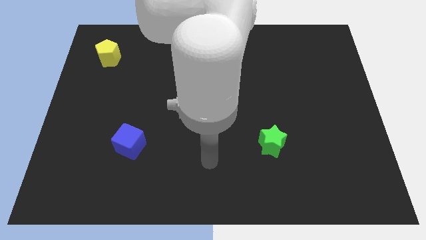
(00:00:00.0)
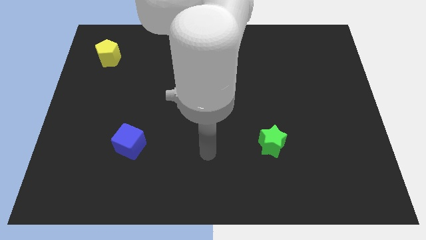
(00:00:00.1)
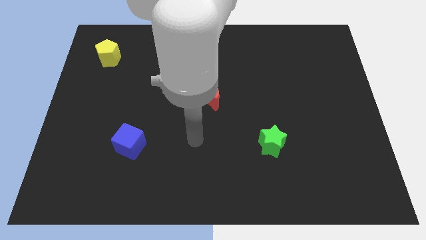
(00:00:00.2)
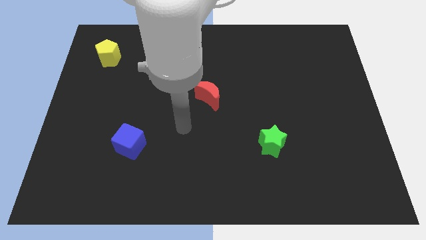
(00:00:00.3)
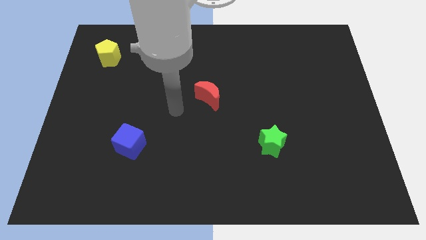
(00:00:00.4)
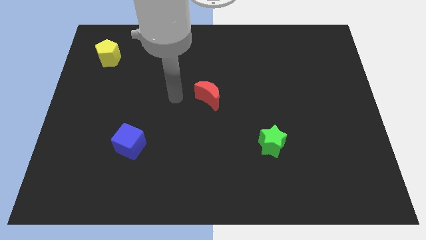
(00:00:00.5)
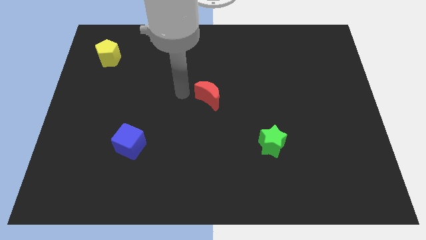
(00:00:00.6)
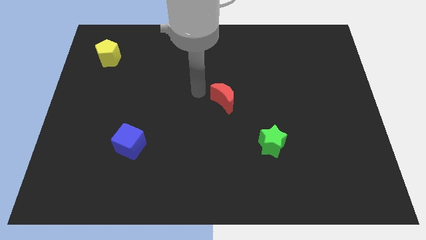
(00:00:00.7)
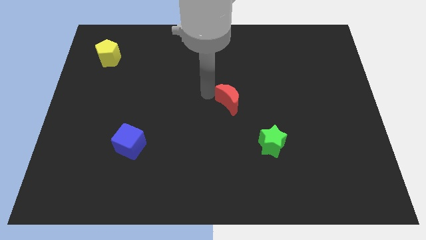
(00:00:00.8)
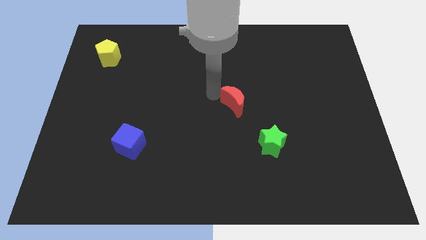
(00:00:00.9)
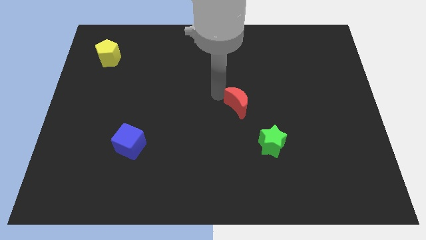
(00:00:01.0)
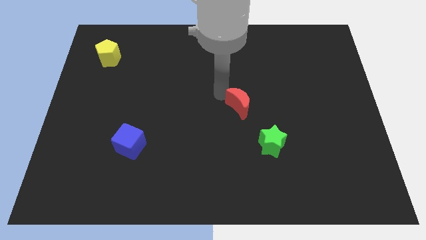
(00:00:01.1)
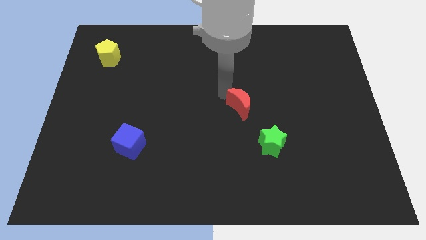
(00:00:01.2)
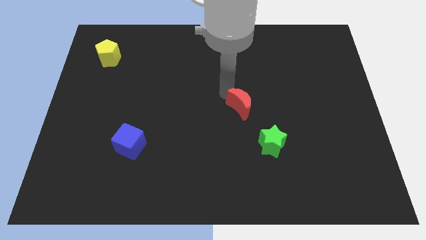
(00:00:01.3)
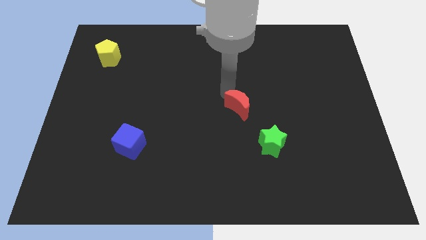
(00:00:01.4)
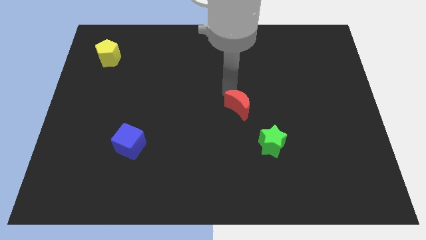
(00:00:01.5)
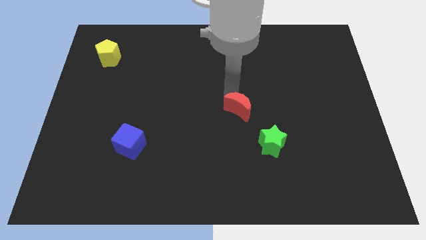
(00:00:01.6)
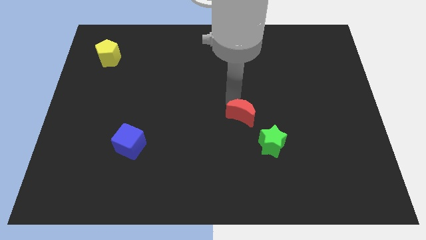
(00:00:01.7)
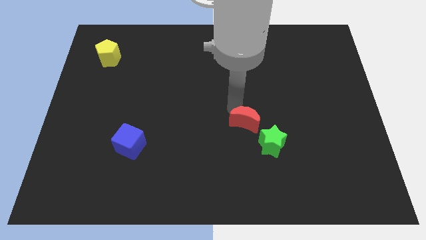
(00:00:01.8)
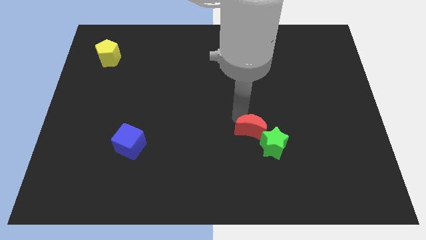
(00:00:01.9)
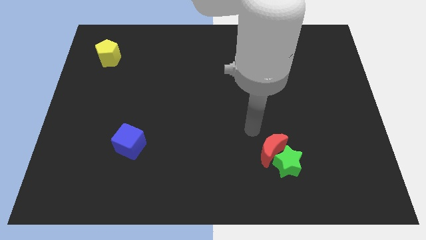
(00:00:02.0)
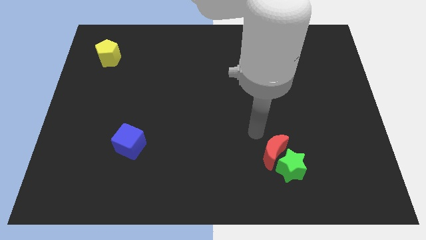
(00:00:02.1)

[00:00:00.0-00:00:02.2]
push the moon to the star

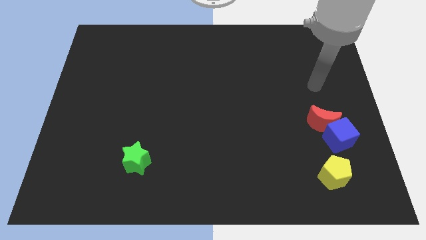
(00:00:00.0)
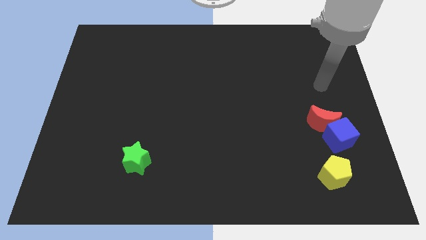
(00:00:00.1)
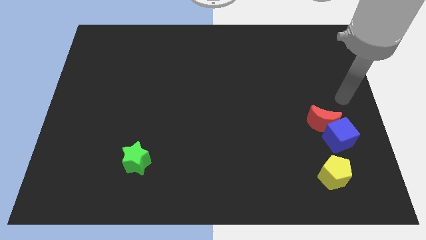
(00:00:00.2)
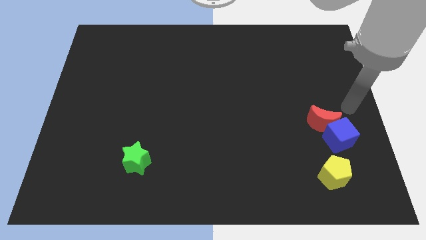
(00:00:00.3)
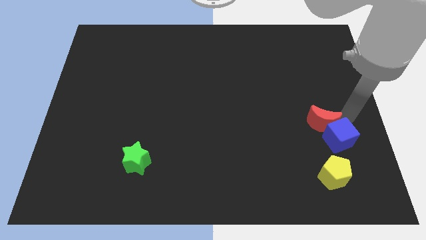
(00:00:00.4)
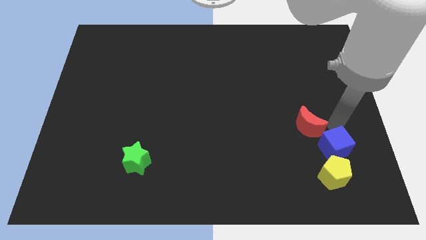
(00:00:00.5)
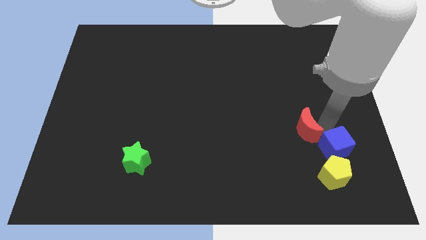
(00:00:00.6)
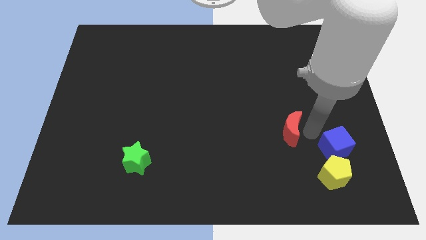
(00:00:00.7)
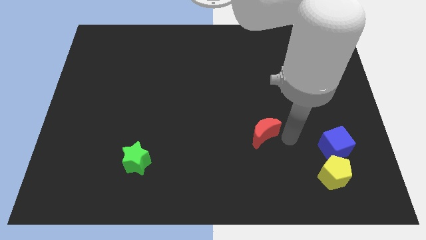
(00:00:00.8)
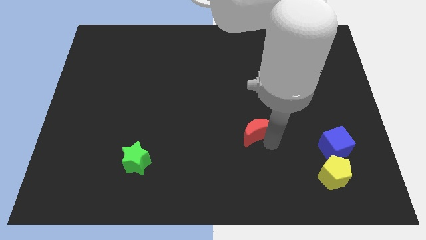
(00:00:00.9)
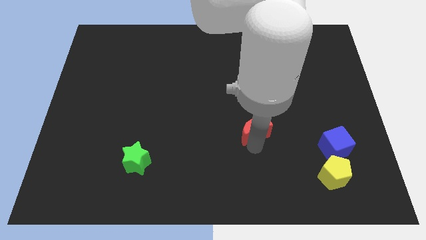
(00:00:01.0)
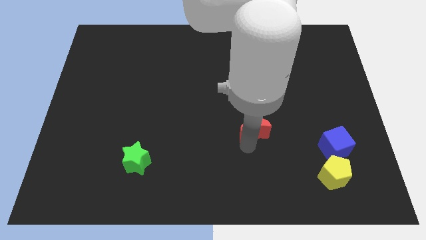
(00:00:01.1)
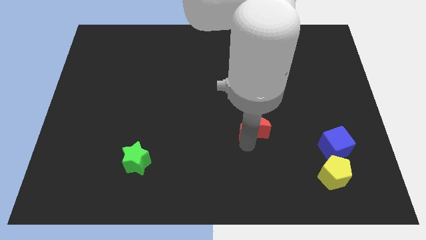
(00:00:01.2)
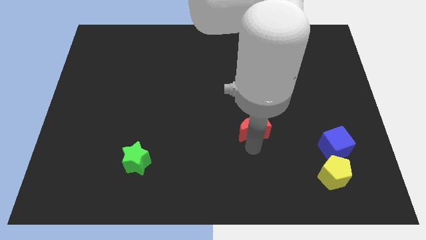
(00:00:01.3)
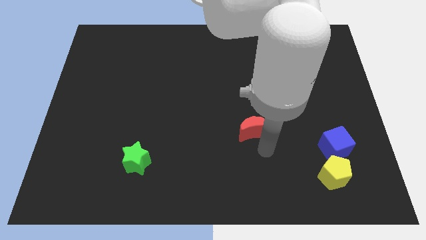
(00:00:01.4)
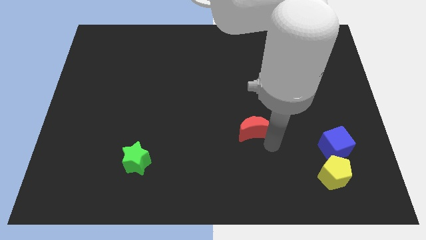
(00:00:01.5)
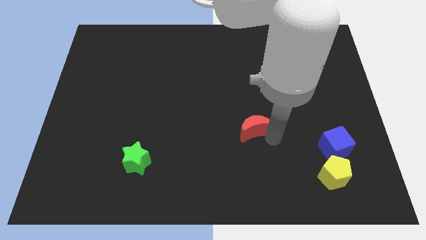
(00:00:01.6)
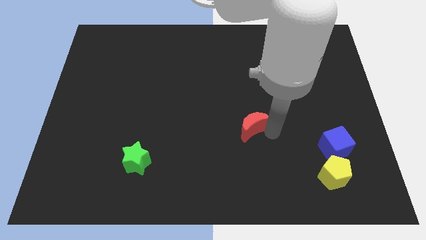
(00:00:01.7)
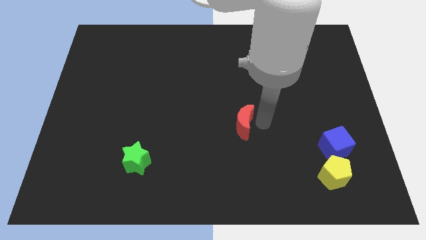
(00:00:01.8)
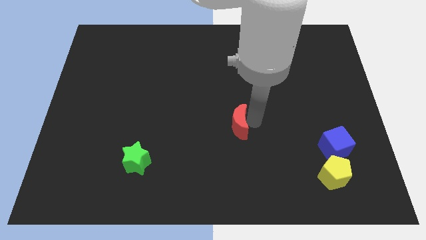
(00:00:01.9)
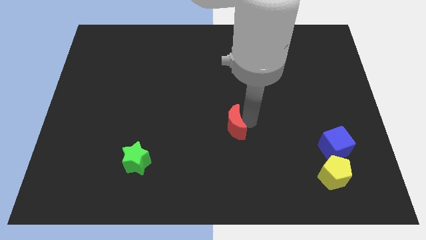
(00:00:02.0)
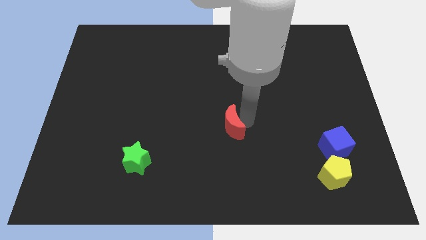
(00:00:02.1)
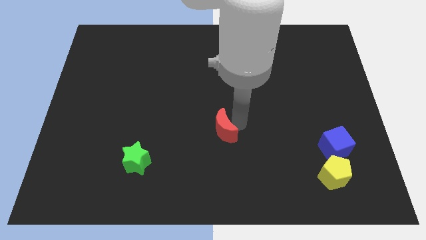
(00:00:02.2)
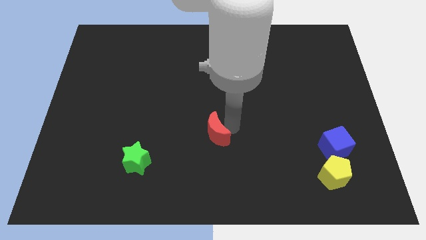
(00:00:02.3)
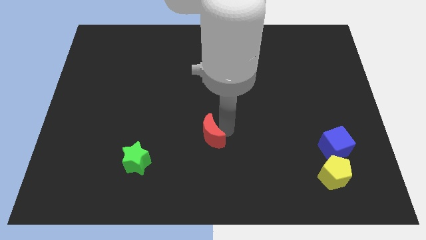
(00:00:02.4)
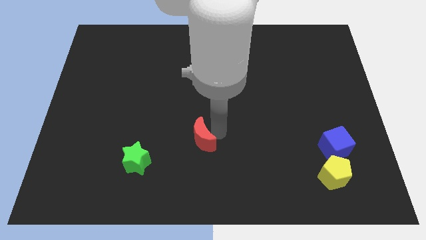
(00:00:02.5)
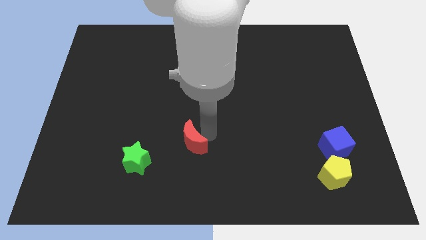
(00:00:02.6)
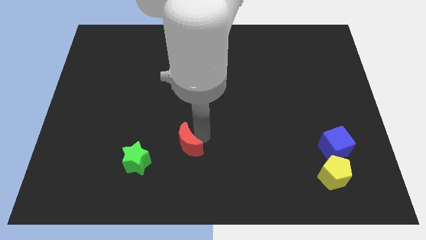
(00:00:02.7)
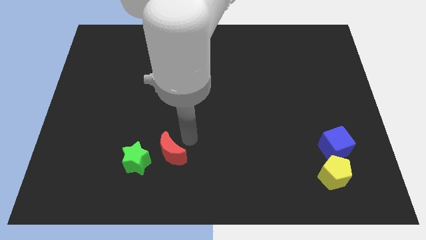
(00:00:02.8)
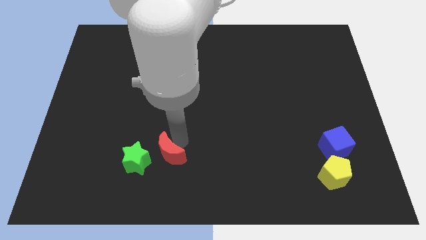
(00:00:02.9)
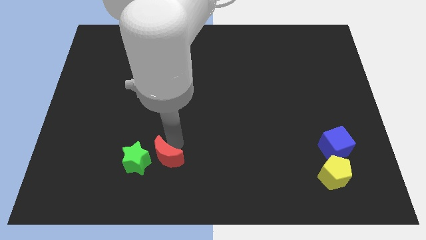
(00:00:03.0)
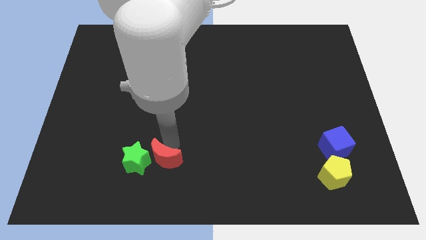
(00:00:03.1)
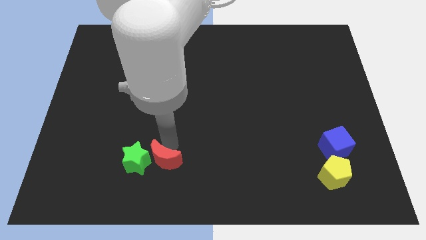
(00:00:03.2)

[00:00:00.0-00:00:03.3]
slide the red moon to the star

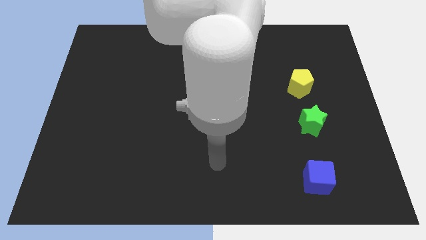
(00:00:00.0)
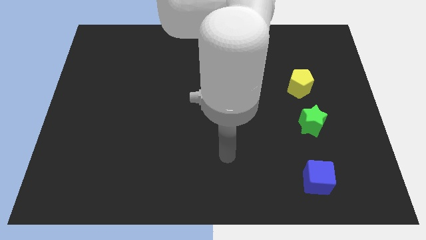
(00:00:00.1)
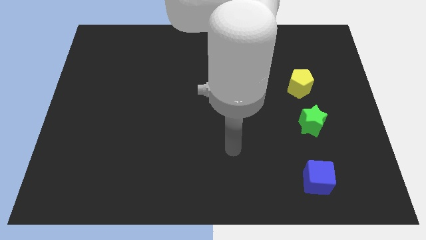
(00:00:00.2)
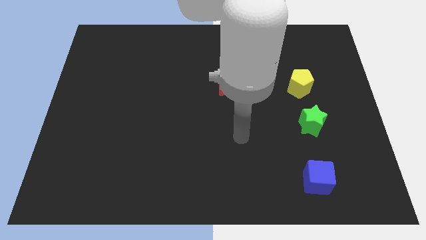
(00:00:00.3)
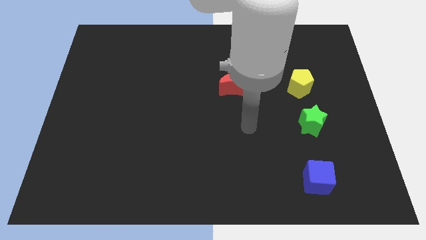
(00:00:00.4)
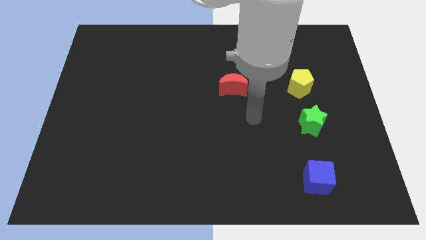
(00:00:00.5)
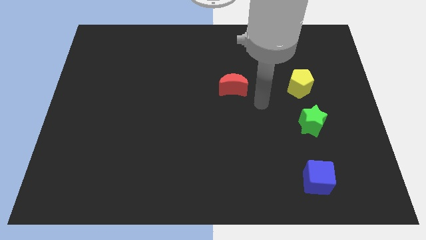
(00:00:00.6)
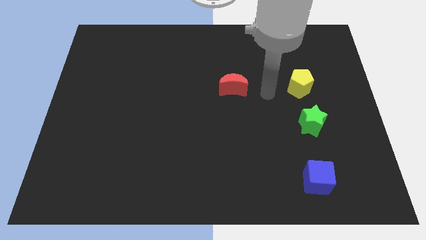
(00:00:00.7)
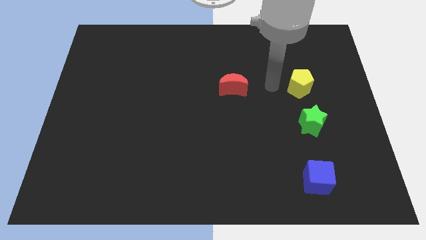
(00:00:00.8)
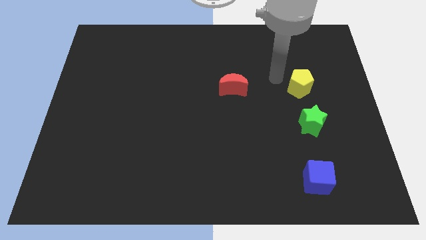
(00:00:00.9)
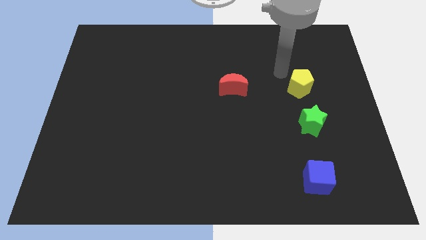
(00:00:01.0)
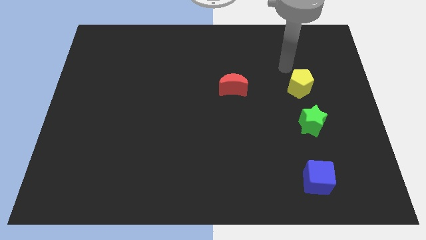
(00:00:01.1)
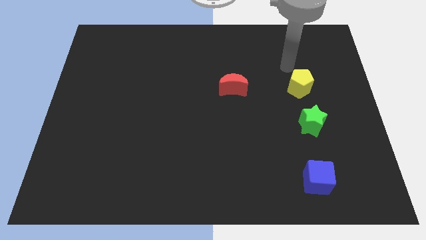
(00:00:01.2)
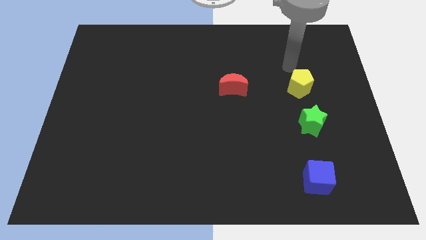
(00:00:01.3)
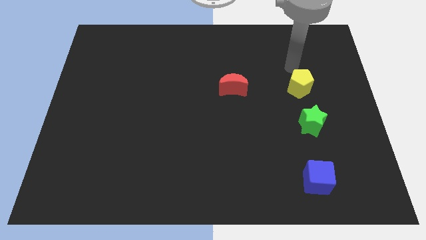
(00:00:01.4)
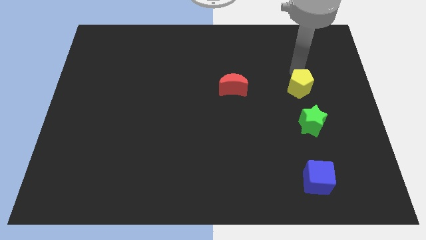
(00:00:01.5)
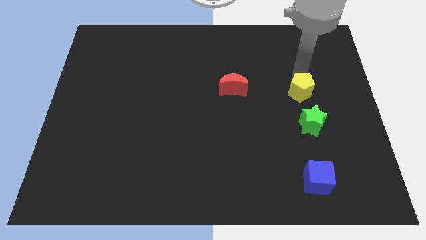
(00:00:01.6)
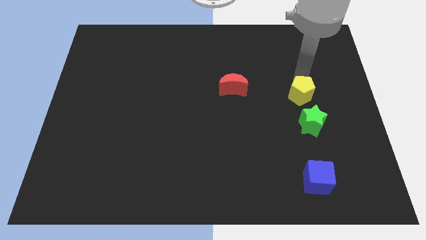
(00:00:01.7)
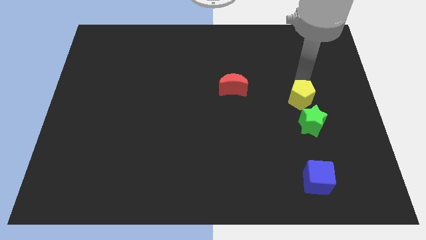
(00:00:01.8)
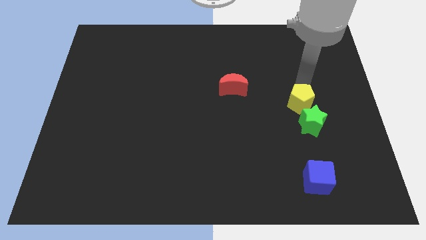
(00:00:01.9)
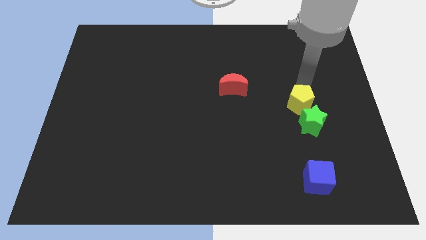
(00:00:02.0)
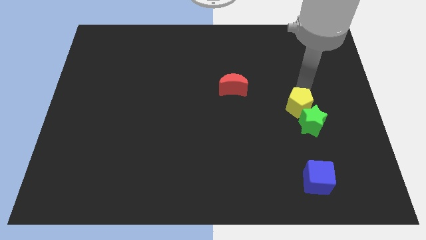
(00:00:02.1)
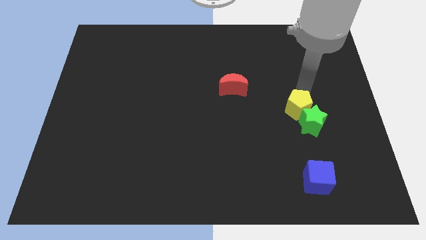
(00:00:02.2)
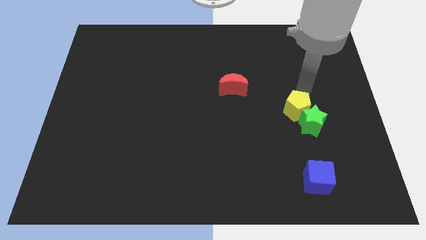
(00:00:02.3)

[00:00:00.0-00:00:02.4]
push the pentagon towards the green star

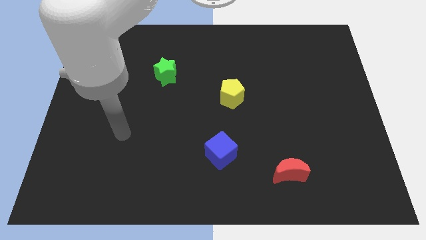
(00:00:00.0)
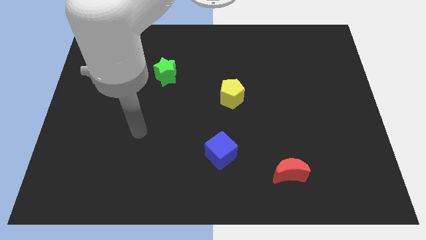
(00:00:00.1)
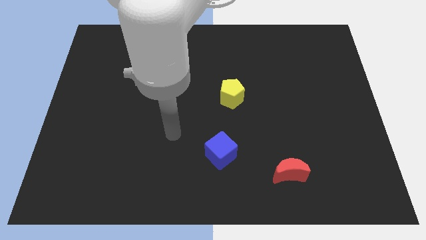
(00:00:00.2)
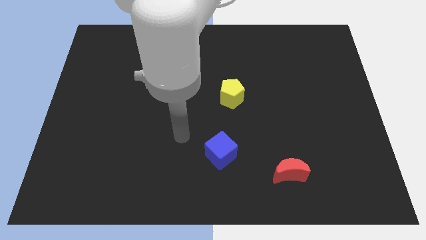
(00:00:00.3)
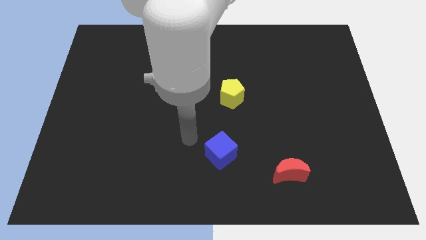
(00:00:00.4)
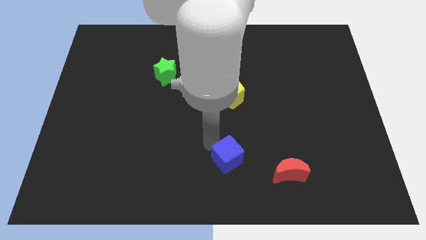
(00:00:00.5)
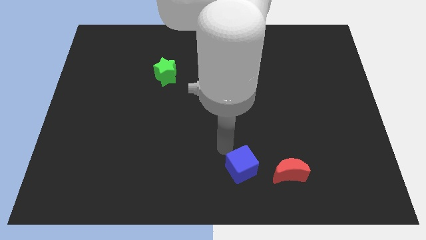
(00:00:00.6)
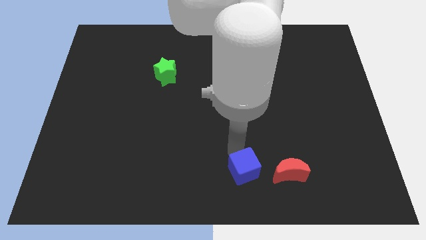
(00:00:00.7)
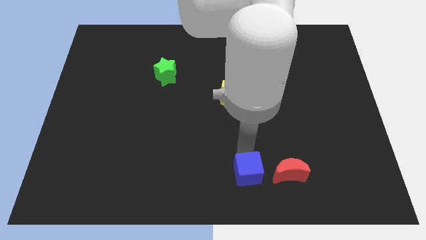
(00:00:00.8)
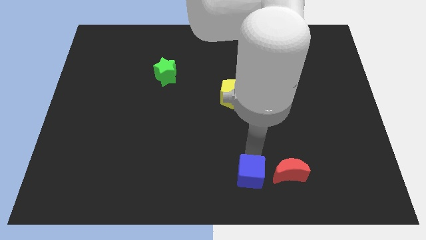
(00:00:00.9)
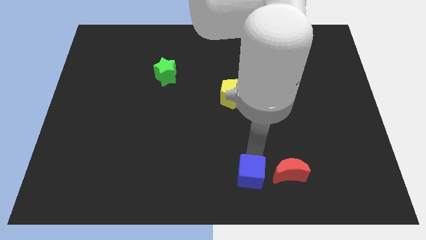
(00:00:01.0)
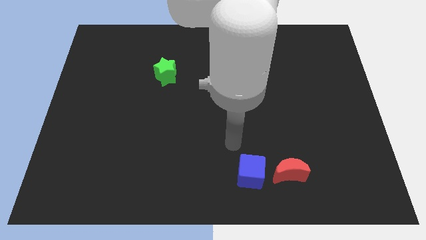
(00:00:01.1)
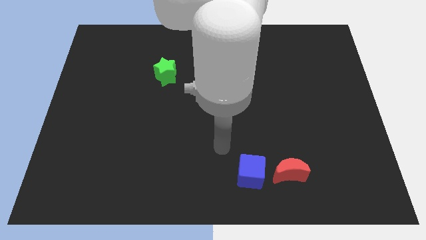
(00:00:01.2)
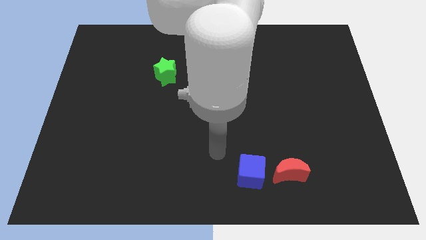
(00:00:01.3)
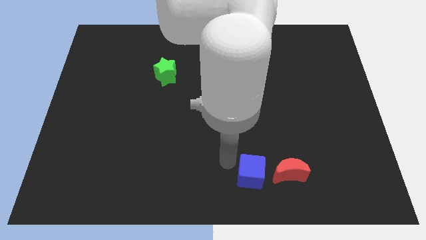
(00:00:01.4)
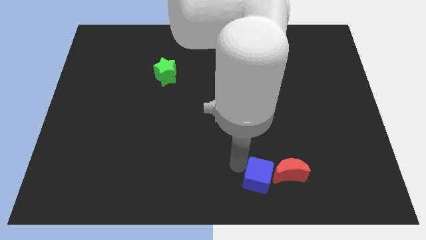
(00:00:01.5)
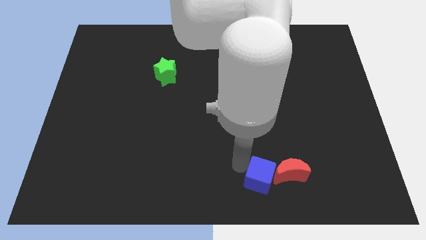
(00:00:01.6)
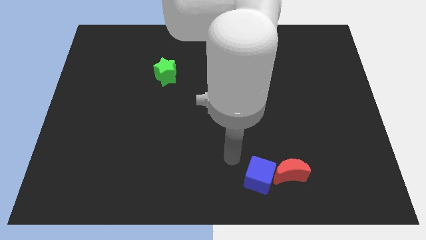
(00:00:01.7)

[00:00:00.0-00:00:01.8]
put the cube to the red moon
